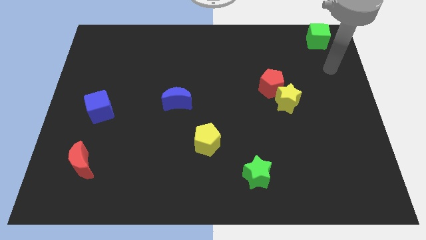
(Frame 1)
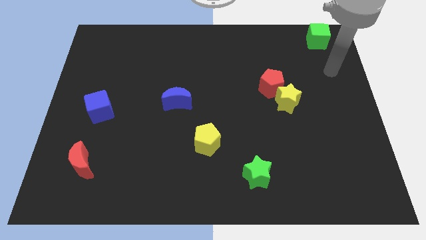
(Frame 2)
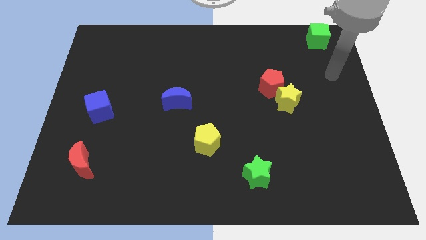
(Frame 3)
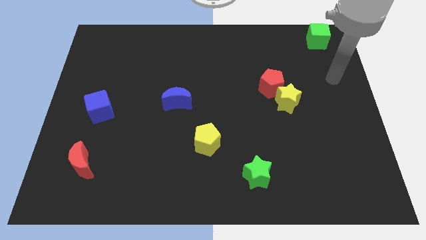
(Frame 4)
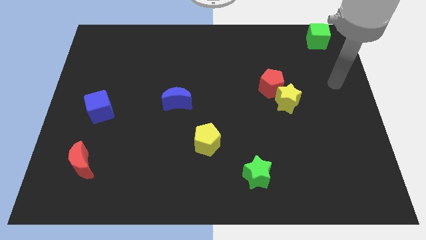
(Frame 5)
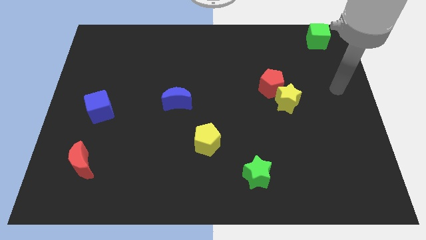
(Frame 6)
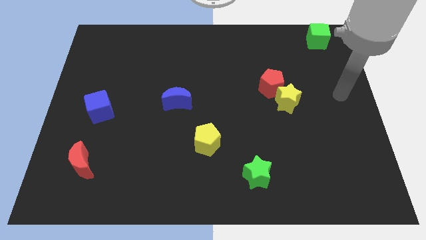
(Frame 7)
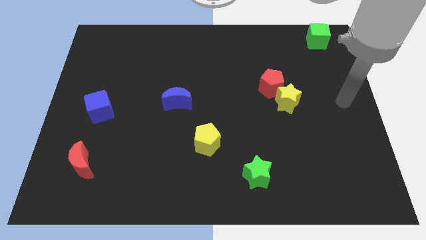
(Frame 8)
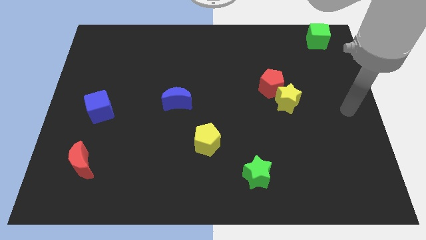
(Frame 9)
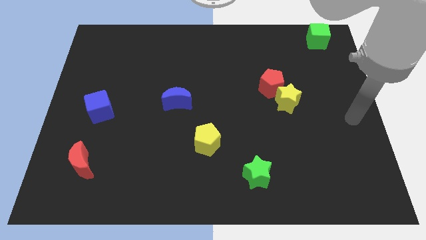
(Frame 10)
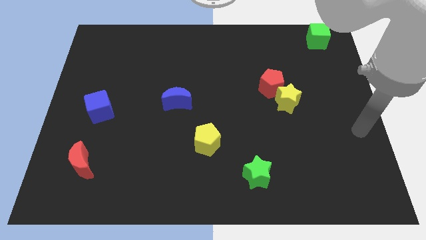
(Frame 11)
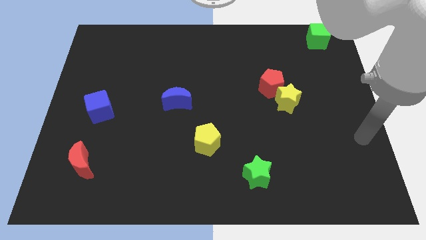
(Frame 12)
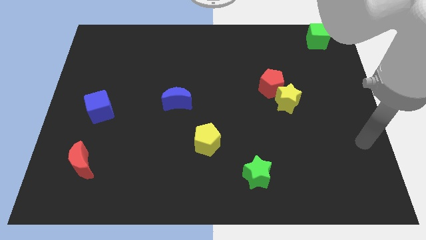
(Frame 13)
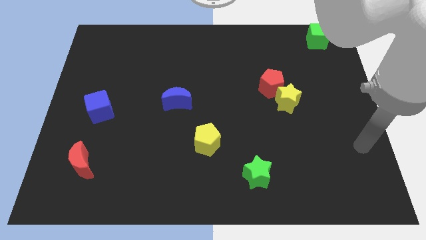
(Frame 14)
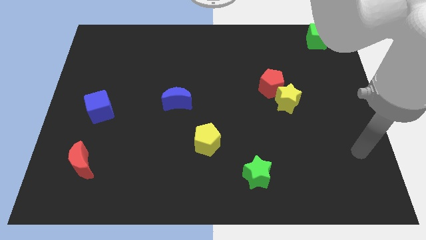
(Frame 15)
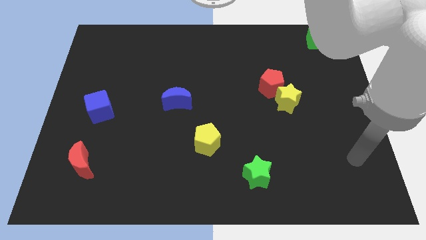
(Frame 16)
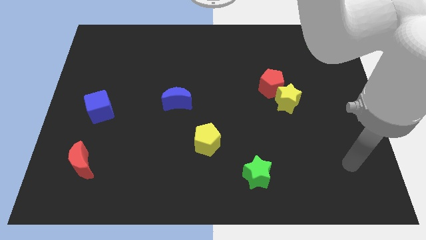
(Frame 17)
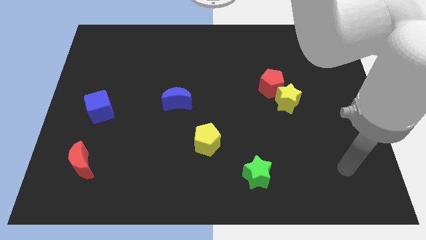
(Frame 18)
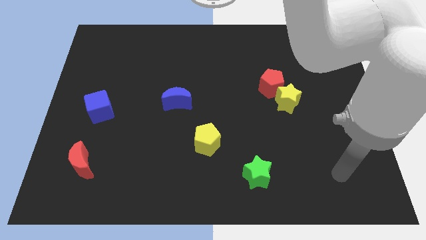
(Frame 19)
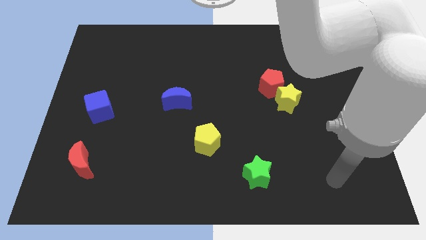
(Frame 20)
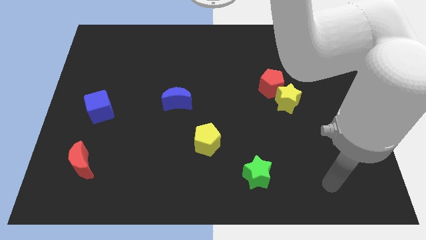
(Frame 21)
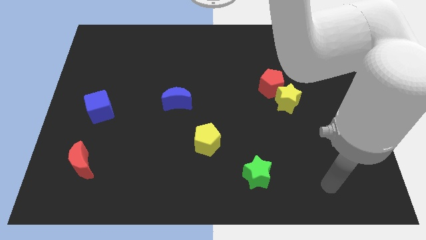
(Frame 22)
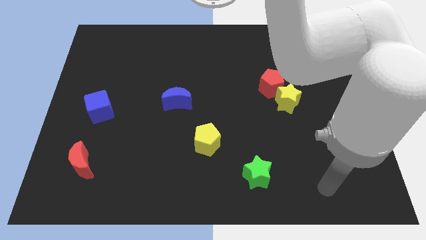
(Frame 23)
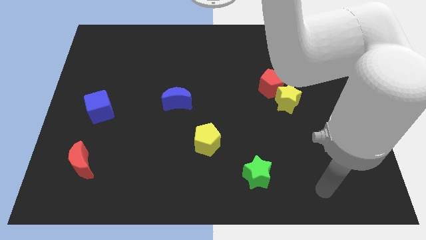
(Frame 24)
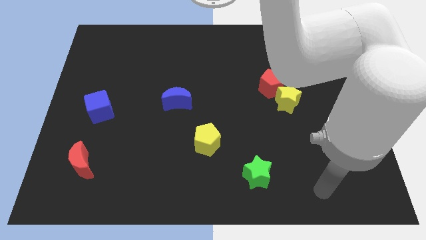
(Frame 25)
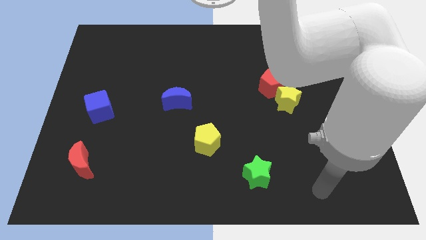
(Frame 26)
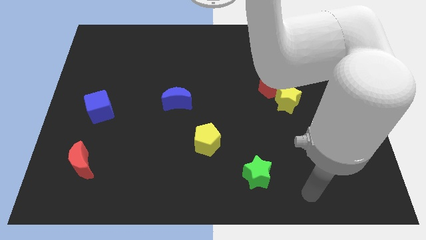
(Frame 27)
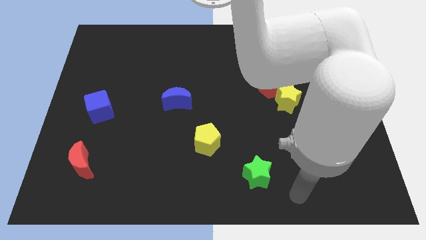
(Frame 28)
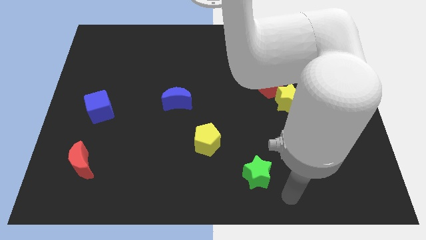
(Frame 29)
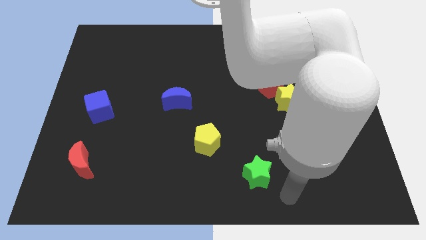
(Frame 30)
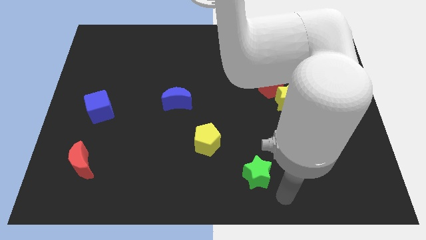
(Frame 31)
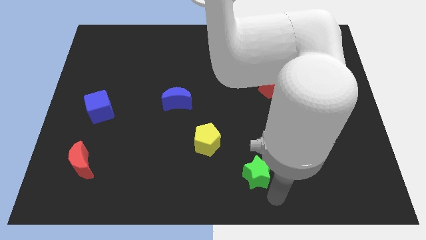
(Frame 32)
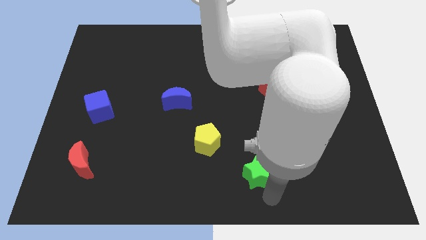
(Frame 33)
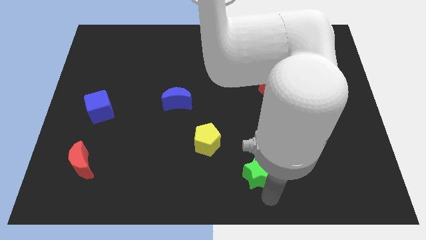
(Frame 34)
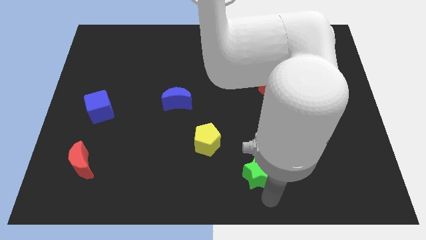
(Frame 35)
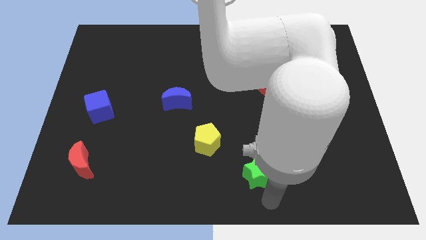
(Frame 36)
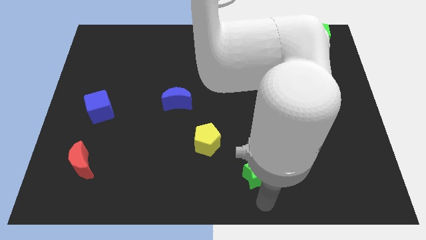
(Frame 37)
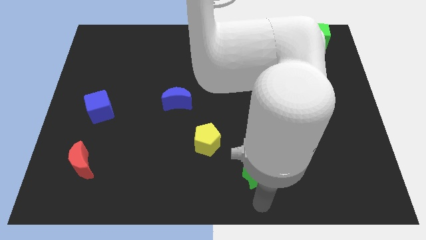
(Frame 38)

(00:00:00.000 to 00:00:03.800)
move the arm towards the bottom of the board

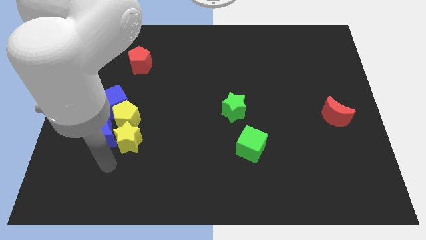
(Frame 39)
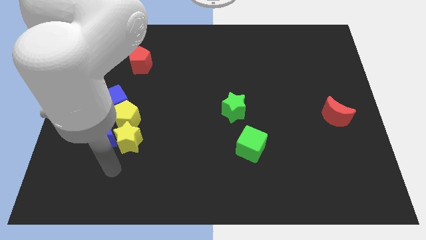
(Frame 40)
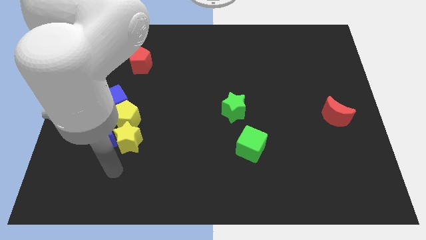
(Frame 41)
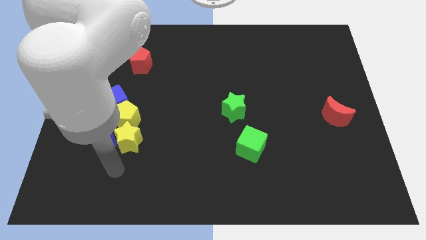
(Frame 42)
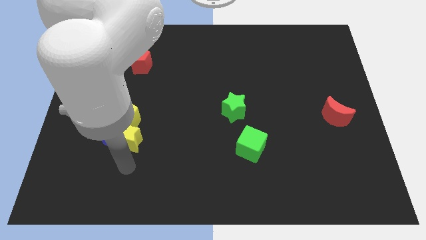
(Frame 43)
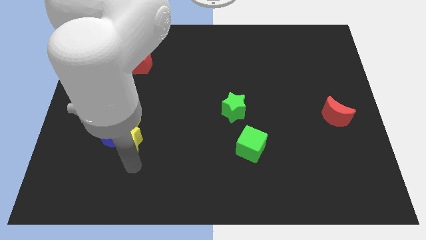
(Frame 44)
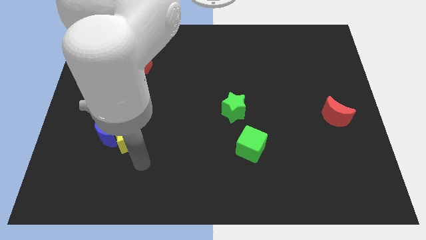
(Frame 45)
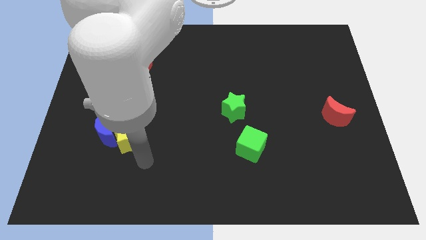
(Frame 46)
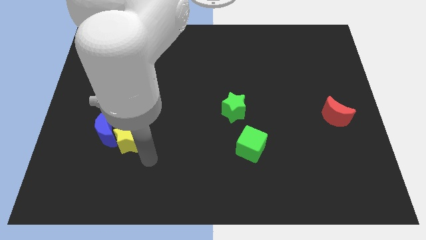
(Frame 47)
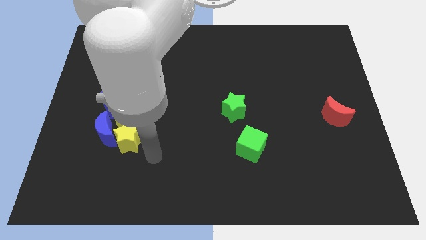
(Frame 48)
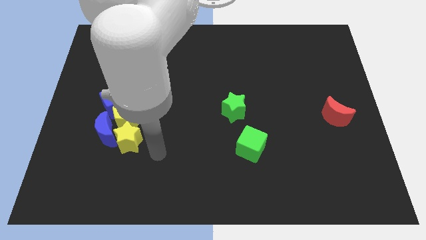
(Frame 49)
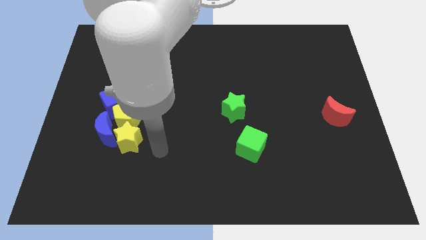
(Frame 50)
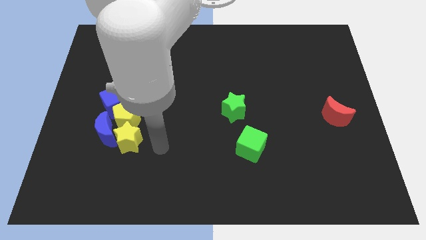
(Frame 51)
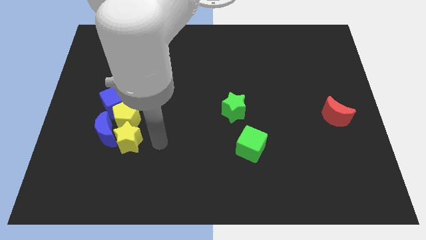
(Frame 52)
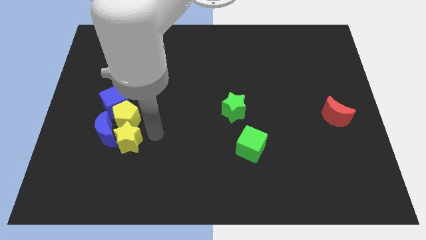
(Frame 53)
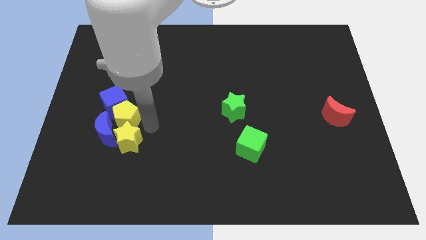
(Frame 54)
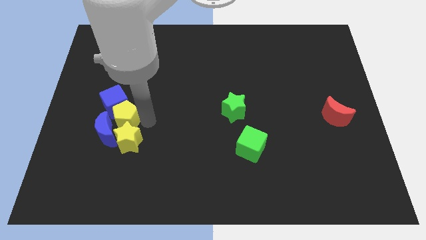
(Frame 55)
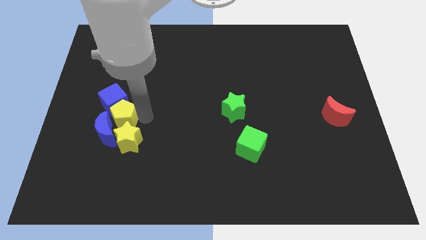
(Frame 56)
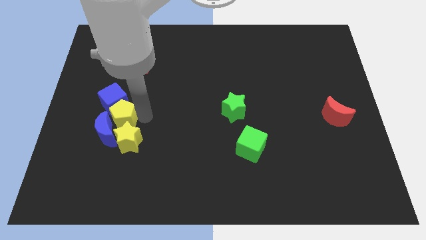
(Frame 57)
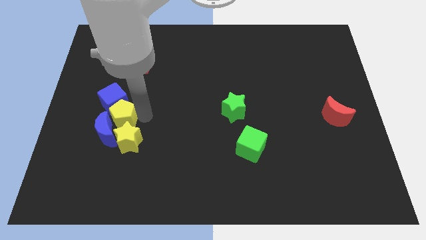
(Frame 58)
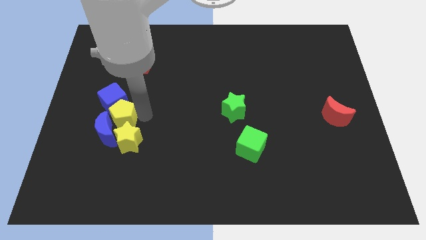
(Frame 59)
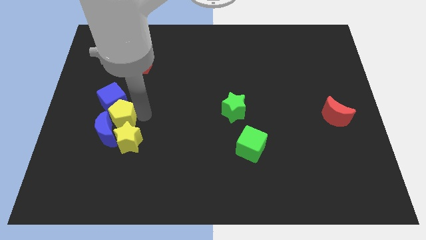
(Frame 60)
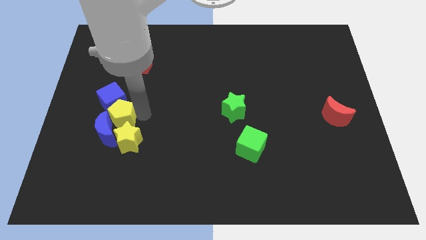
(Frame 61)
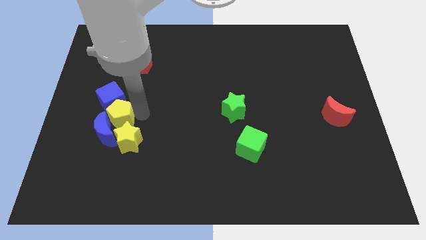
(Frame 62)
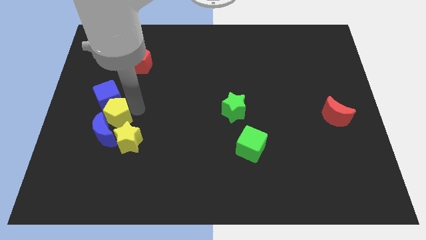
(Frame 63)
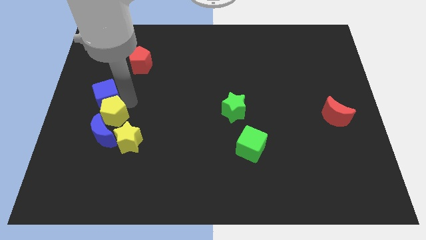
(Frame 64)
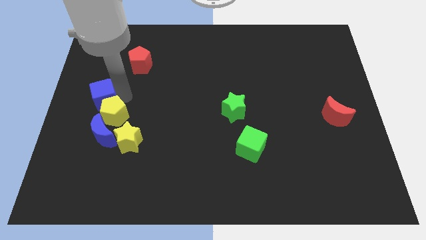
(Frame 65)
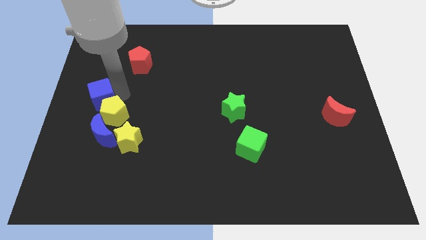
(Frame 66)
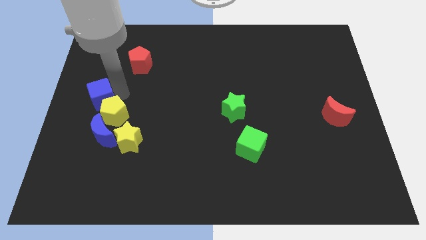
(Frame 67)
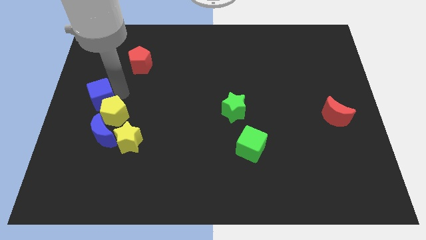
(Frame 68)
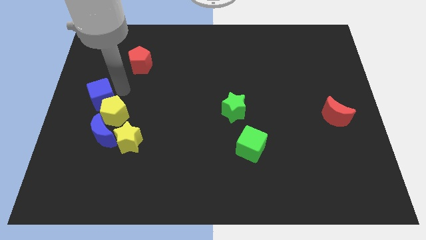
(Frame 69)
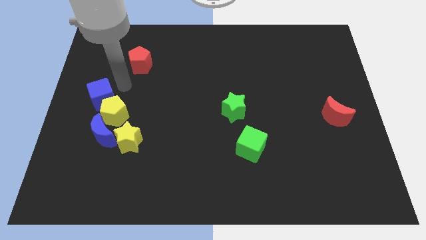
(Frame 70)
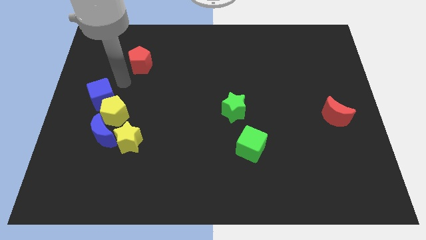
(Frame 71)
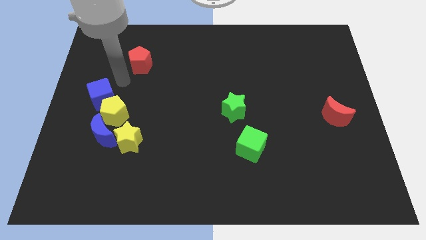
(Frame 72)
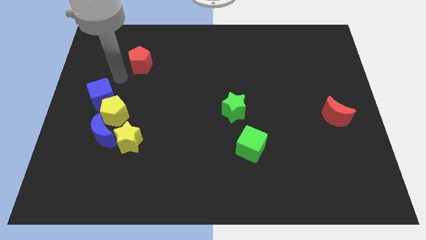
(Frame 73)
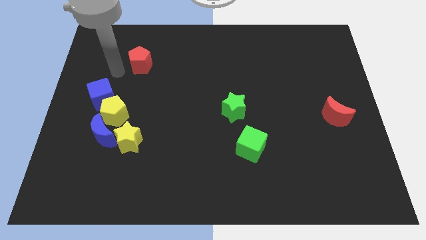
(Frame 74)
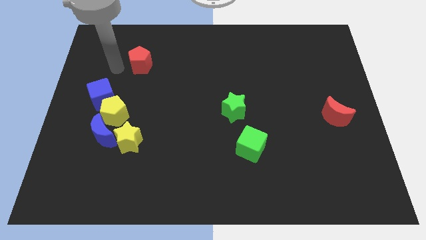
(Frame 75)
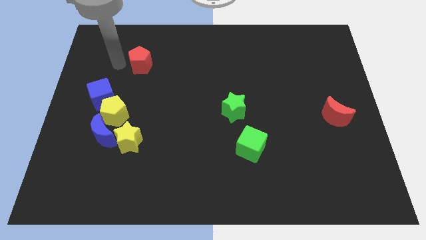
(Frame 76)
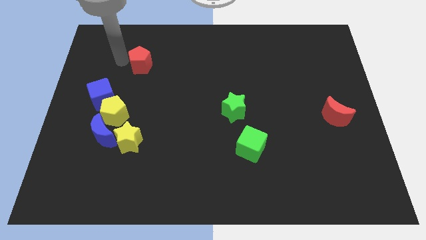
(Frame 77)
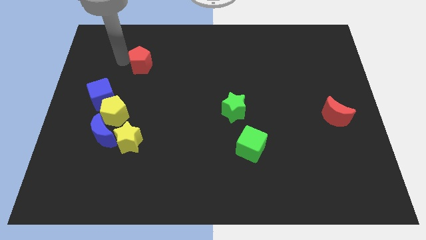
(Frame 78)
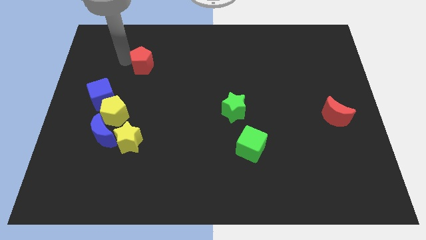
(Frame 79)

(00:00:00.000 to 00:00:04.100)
move the blue cube with yellow pentagon

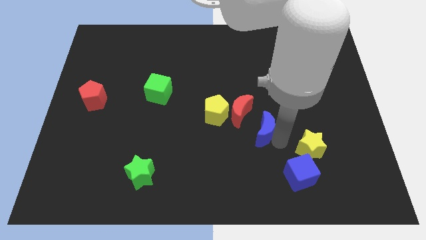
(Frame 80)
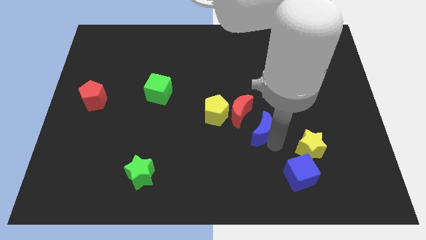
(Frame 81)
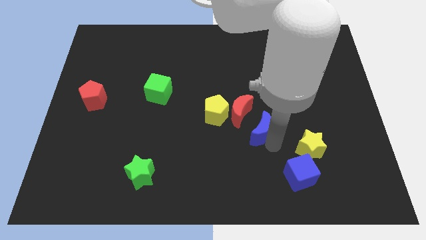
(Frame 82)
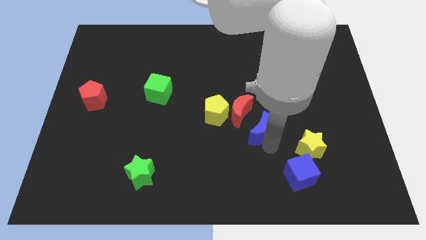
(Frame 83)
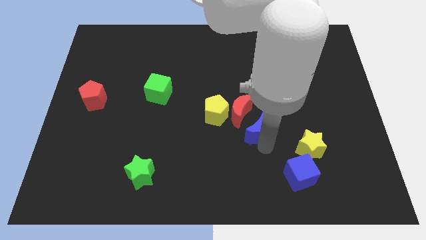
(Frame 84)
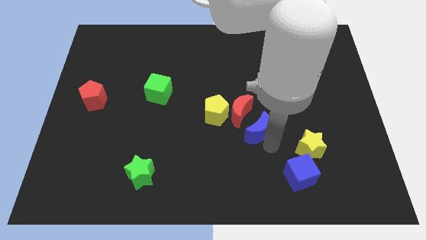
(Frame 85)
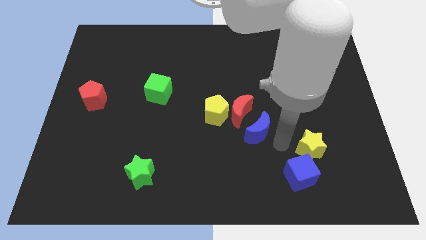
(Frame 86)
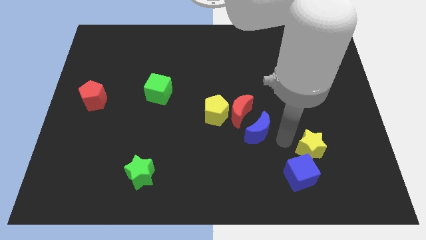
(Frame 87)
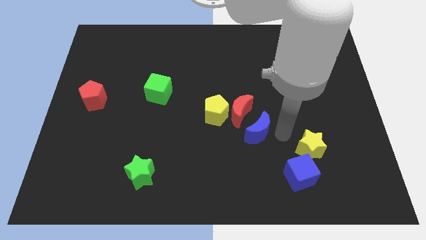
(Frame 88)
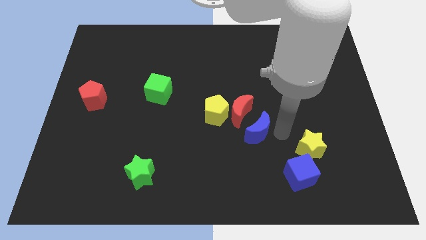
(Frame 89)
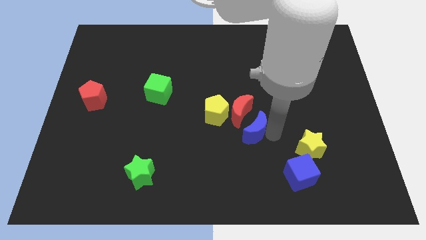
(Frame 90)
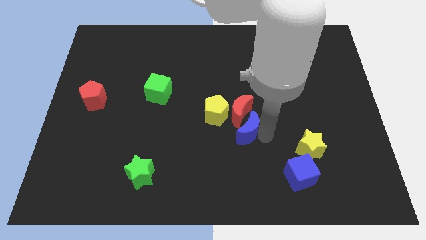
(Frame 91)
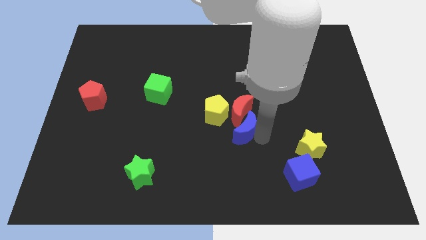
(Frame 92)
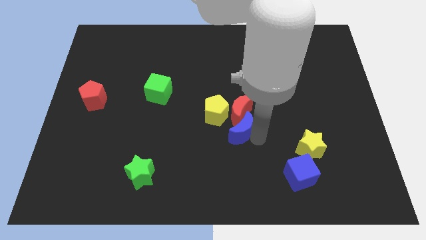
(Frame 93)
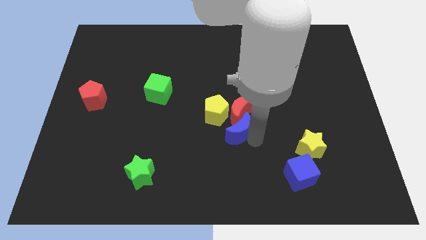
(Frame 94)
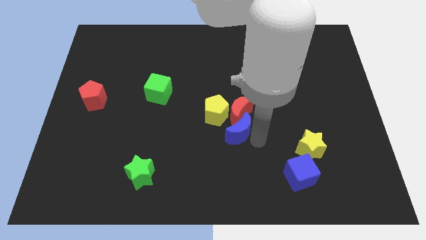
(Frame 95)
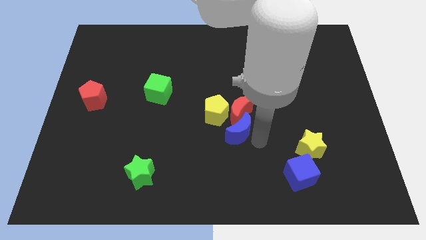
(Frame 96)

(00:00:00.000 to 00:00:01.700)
push the blue crescent into the red crescent
